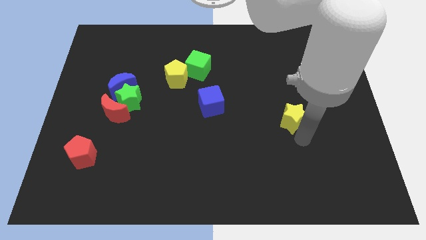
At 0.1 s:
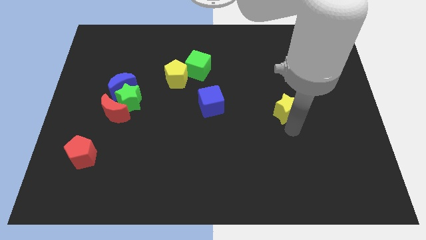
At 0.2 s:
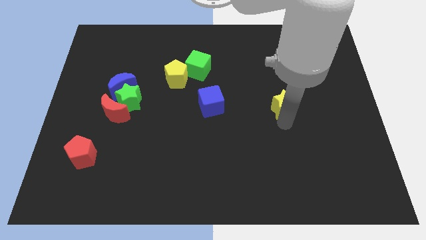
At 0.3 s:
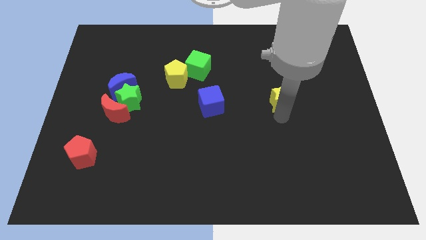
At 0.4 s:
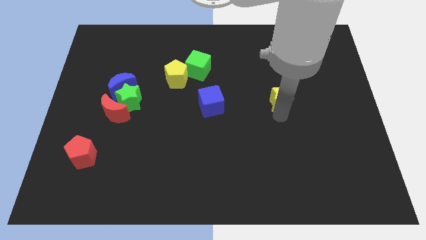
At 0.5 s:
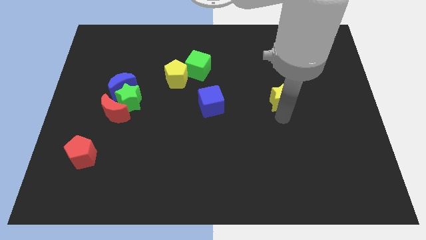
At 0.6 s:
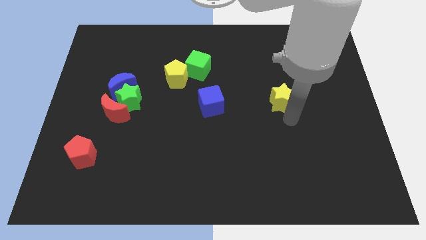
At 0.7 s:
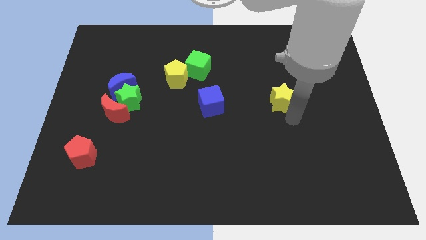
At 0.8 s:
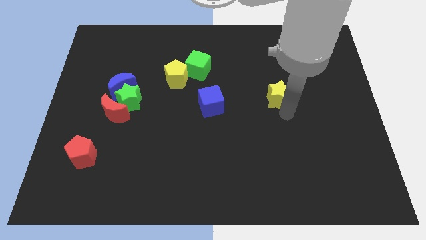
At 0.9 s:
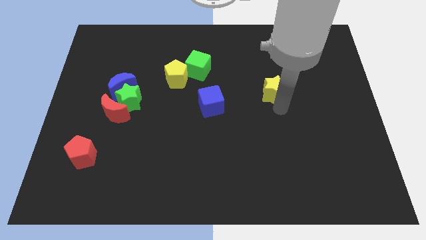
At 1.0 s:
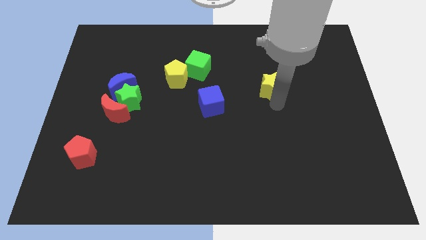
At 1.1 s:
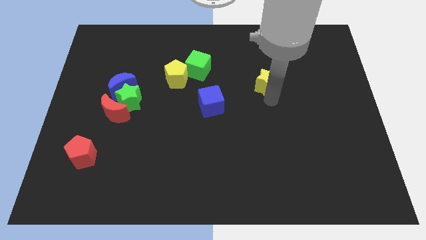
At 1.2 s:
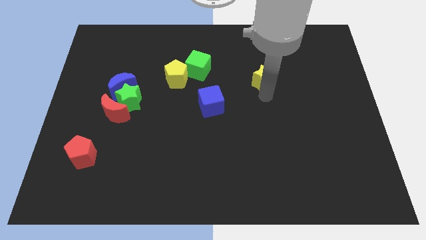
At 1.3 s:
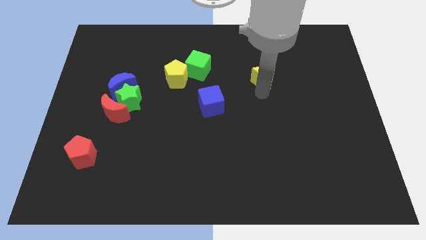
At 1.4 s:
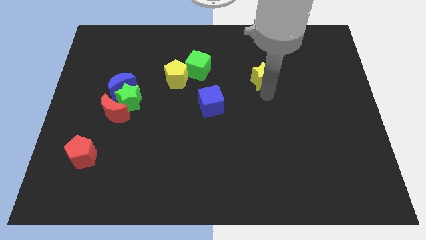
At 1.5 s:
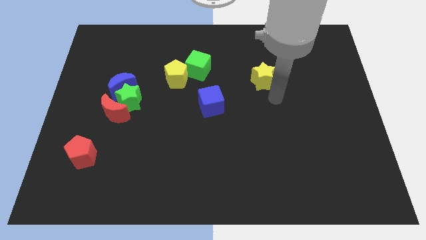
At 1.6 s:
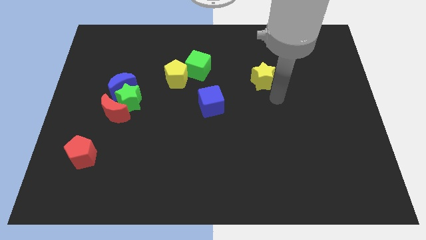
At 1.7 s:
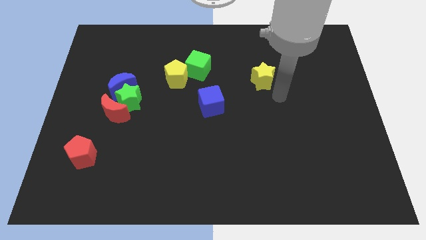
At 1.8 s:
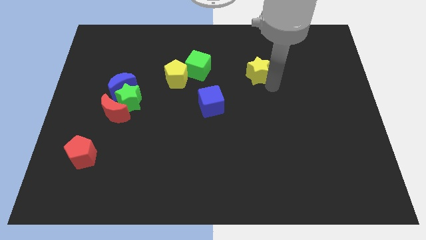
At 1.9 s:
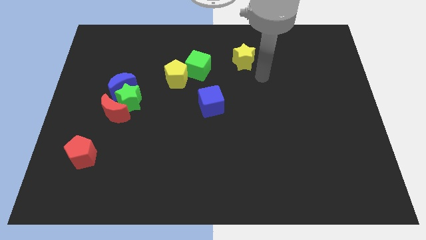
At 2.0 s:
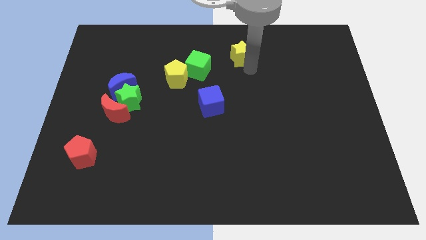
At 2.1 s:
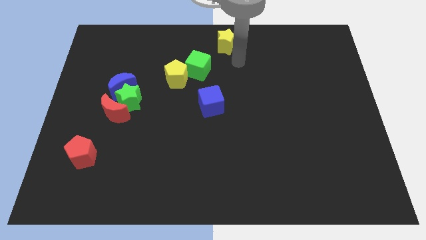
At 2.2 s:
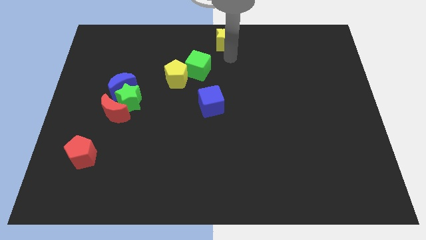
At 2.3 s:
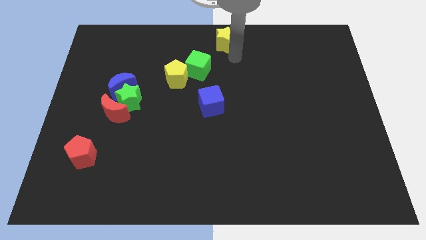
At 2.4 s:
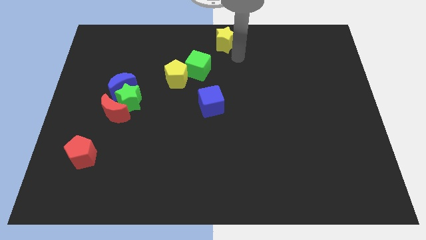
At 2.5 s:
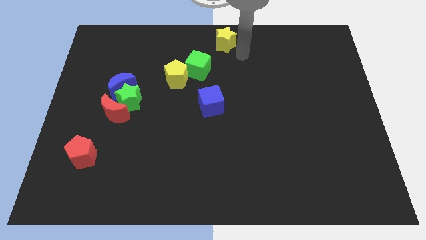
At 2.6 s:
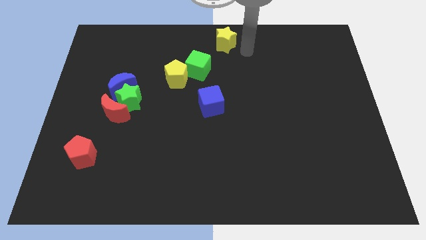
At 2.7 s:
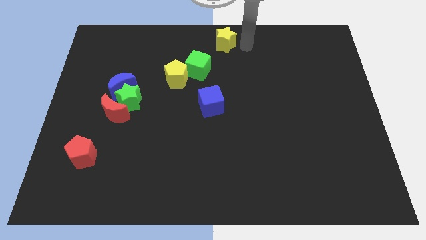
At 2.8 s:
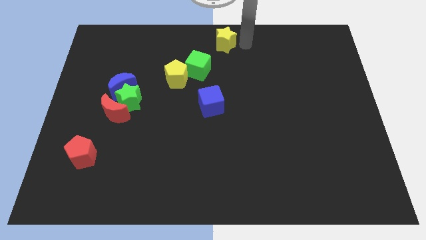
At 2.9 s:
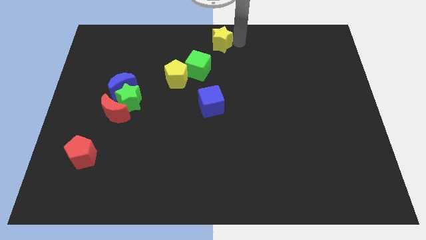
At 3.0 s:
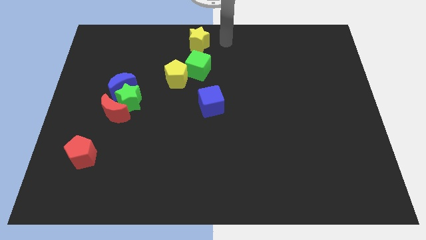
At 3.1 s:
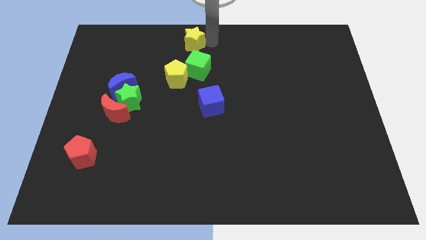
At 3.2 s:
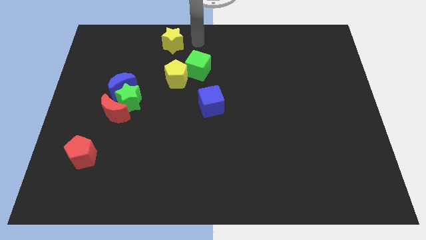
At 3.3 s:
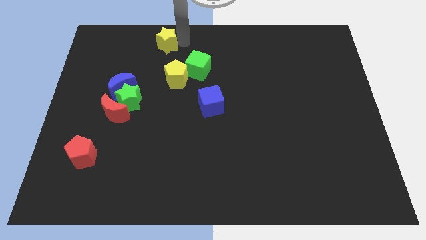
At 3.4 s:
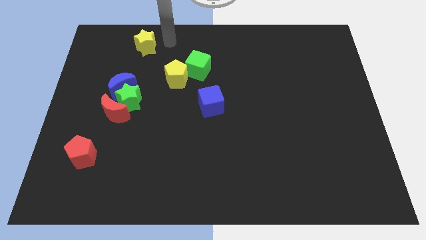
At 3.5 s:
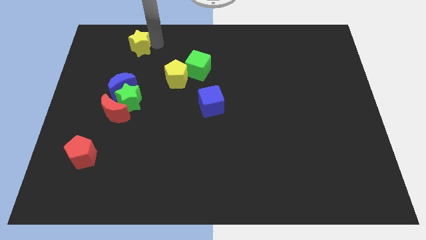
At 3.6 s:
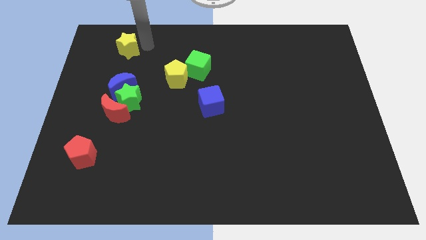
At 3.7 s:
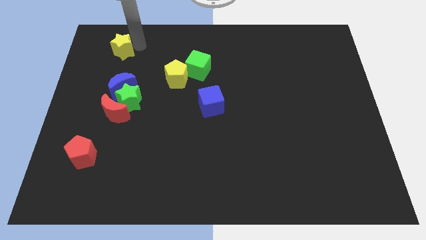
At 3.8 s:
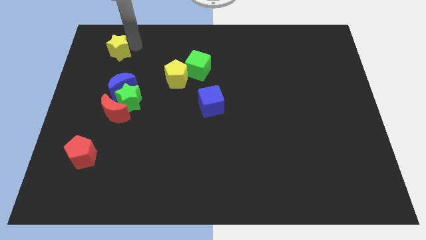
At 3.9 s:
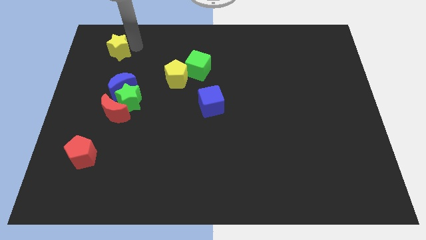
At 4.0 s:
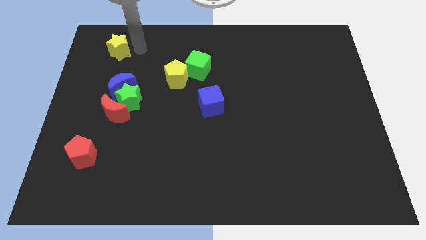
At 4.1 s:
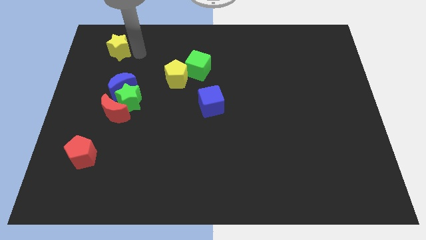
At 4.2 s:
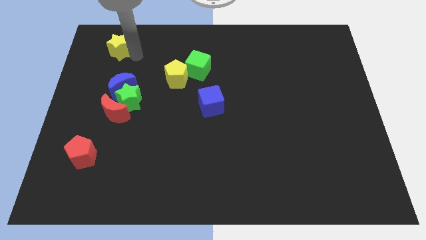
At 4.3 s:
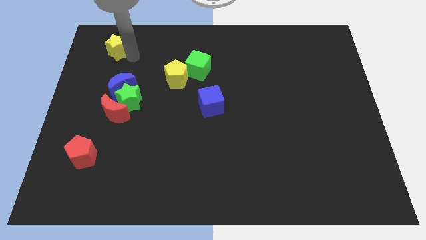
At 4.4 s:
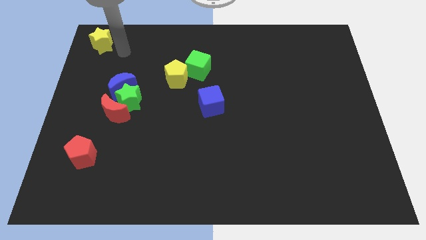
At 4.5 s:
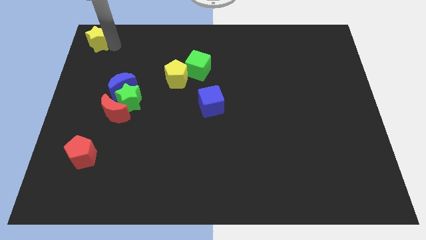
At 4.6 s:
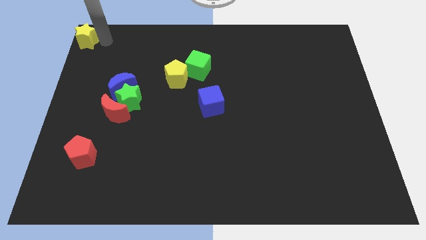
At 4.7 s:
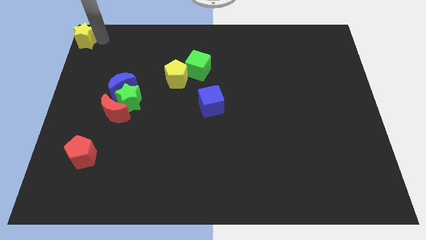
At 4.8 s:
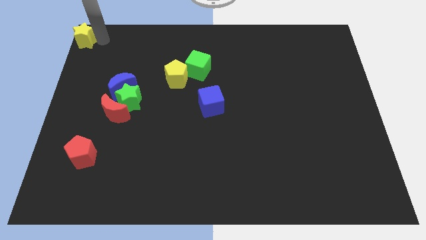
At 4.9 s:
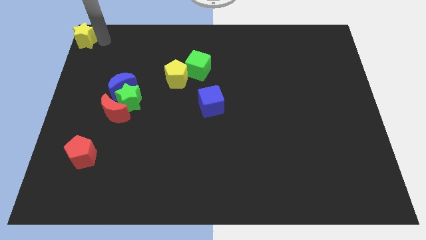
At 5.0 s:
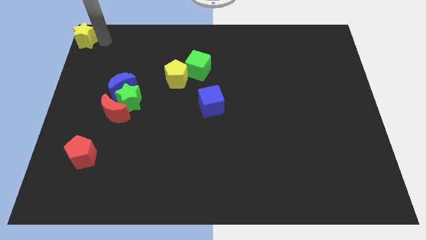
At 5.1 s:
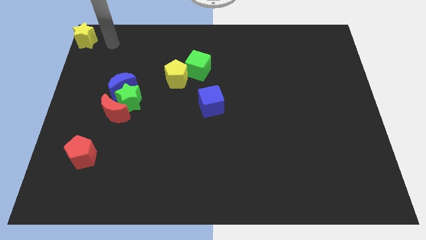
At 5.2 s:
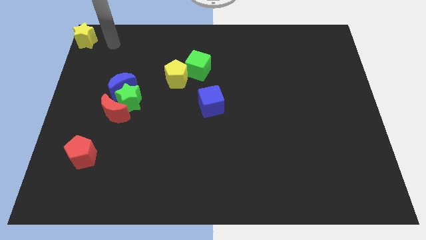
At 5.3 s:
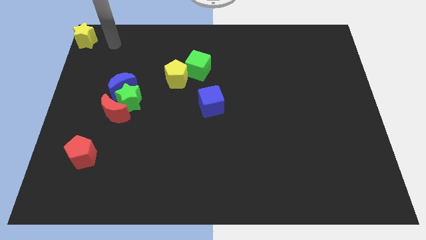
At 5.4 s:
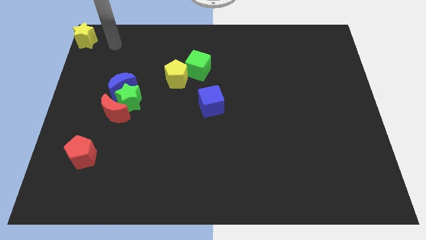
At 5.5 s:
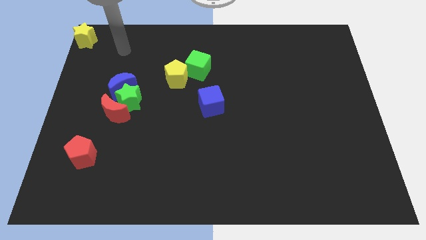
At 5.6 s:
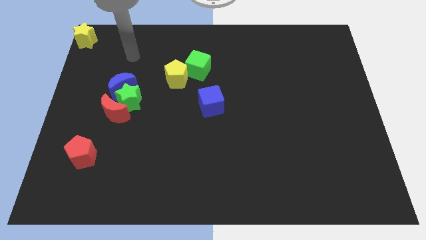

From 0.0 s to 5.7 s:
drag the yellow star to top left corner

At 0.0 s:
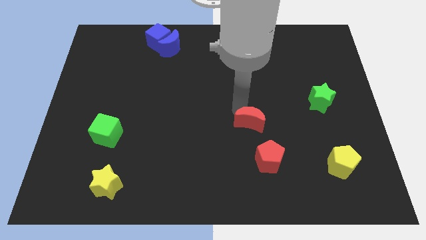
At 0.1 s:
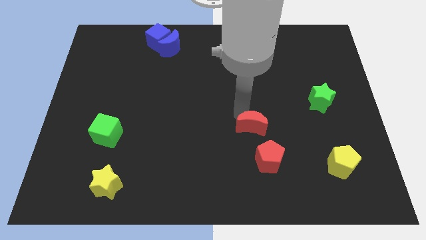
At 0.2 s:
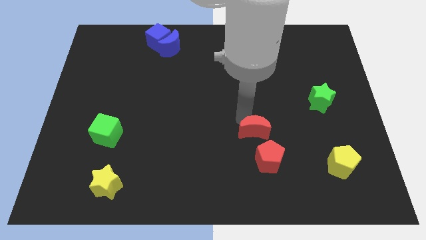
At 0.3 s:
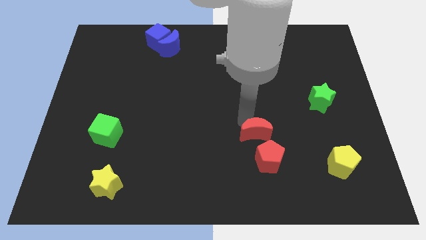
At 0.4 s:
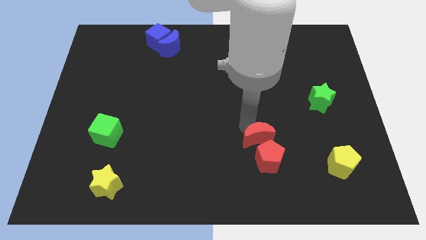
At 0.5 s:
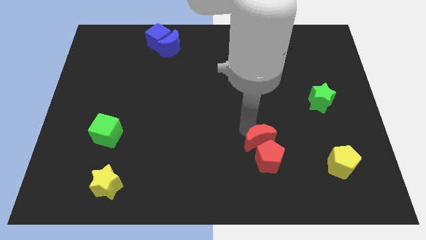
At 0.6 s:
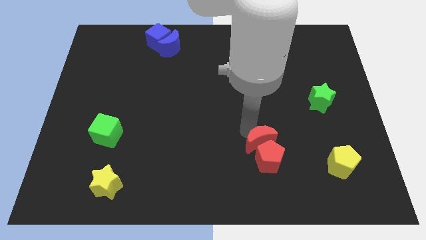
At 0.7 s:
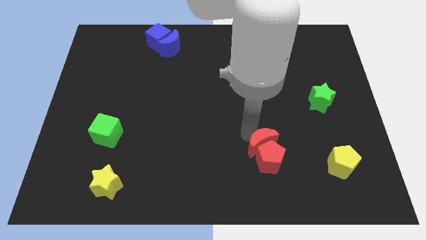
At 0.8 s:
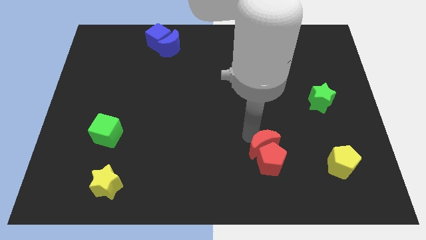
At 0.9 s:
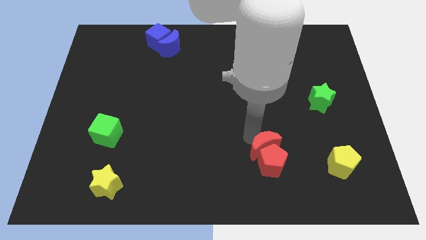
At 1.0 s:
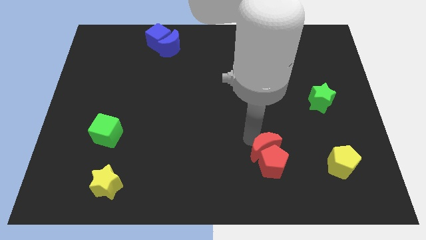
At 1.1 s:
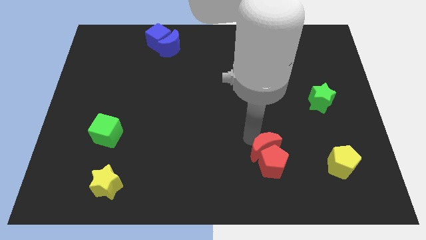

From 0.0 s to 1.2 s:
push the red crescent into the red pentagon

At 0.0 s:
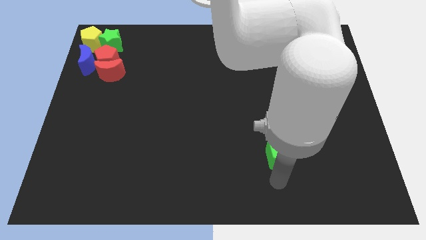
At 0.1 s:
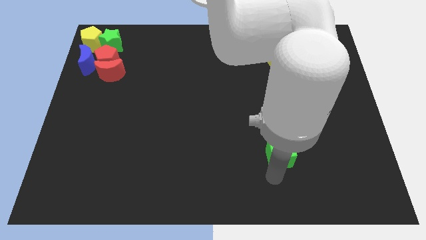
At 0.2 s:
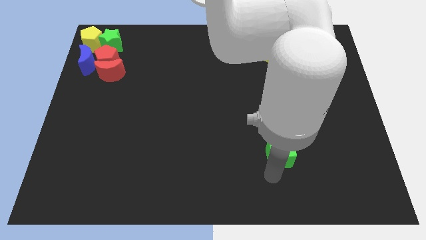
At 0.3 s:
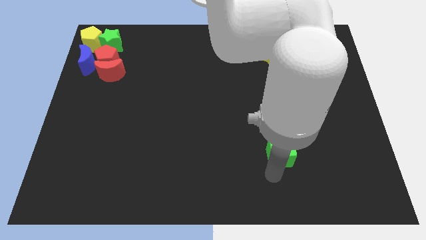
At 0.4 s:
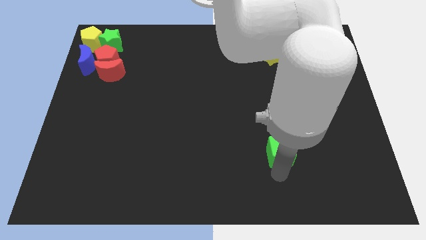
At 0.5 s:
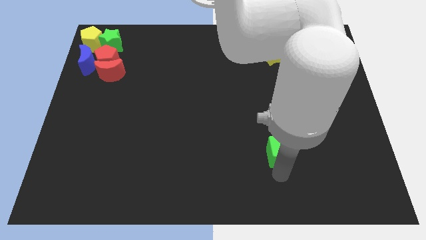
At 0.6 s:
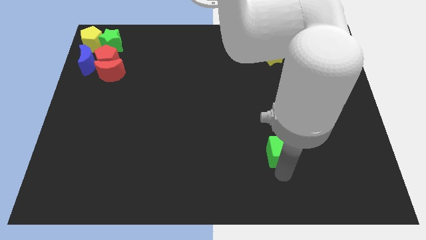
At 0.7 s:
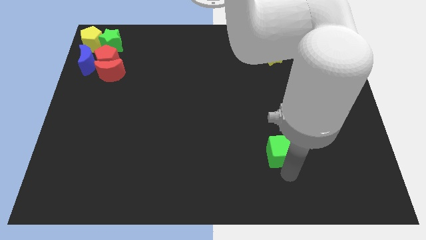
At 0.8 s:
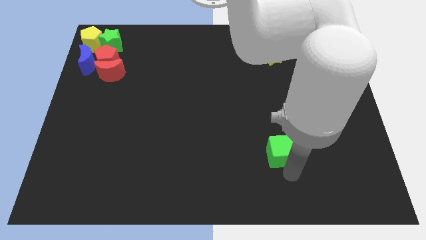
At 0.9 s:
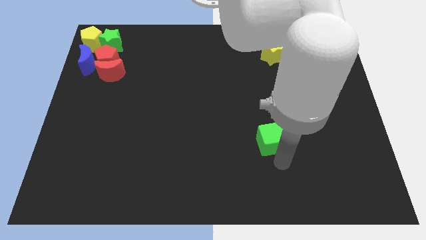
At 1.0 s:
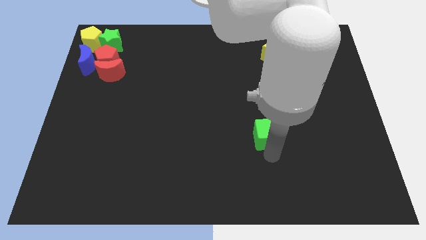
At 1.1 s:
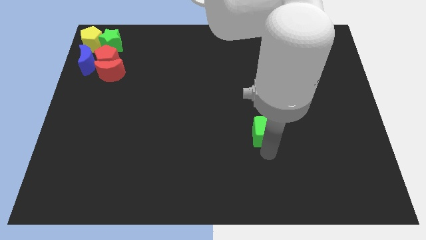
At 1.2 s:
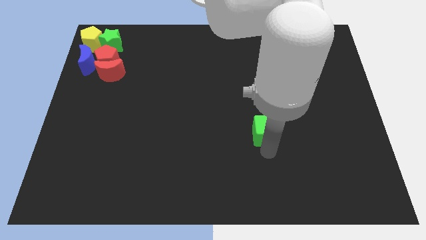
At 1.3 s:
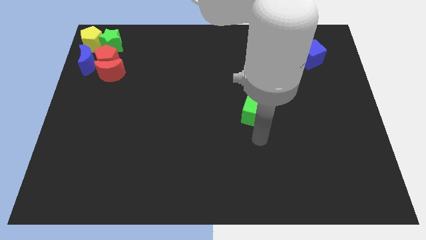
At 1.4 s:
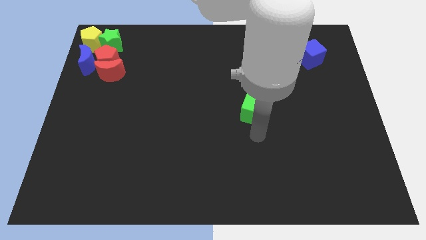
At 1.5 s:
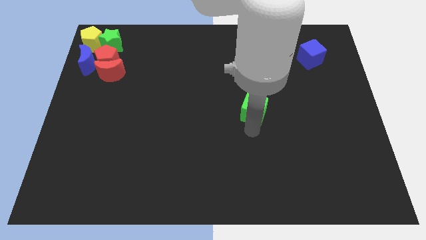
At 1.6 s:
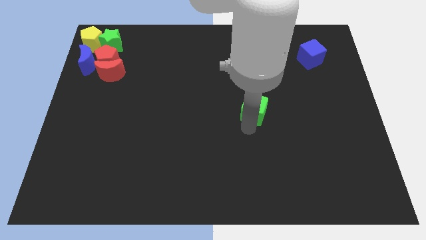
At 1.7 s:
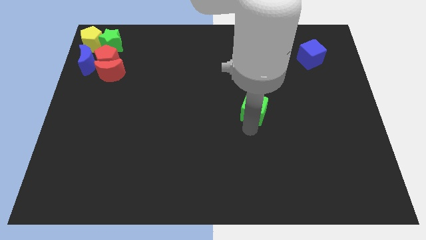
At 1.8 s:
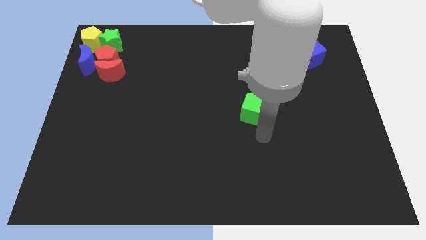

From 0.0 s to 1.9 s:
push the green cube slightly towards the top side of the board
